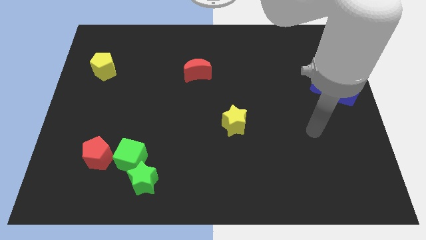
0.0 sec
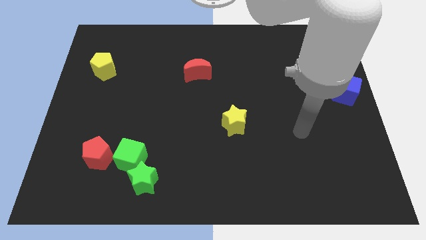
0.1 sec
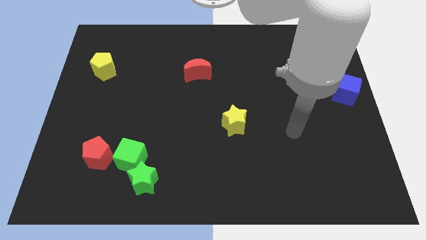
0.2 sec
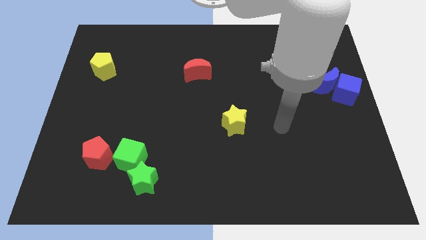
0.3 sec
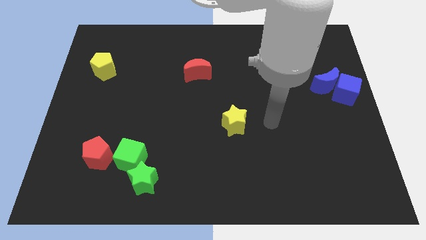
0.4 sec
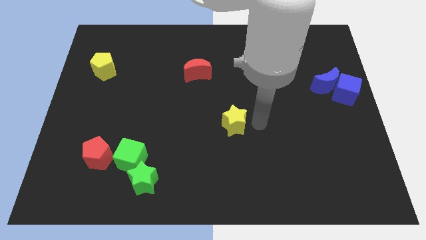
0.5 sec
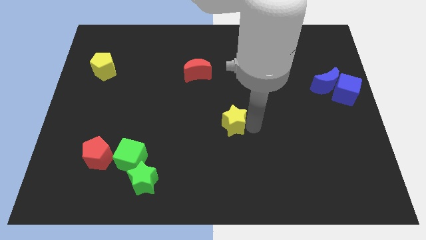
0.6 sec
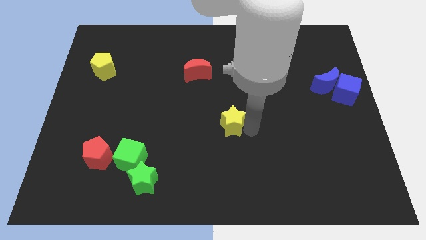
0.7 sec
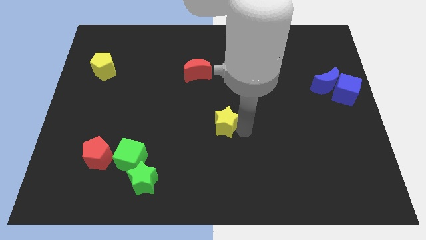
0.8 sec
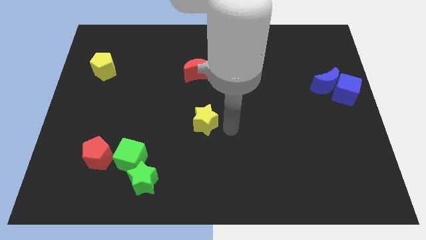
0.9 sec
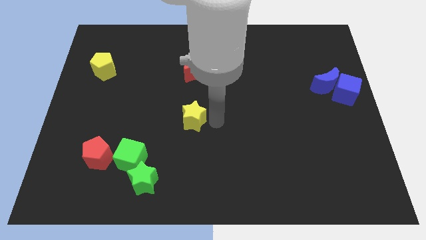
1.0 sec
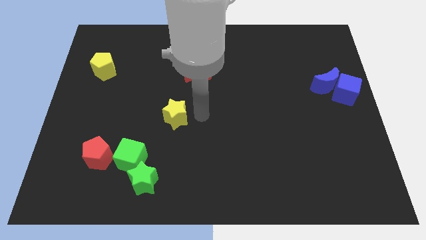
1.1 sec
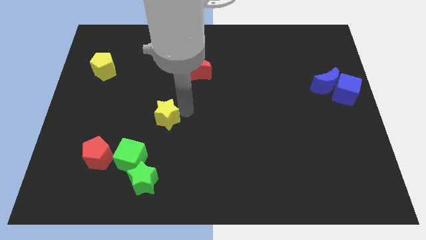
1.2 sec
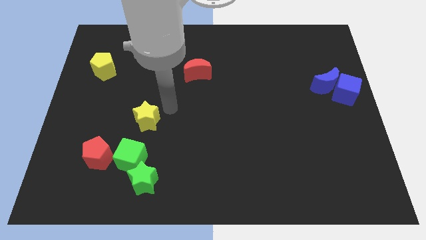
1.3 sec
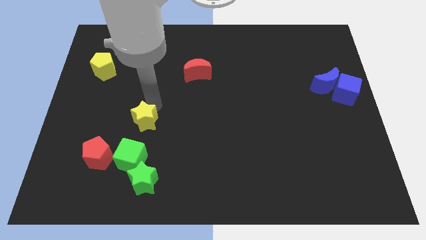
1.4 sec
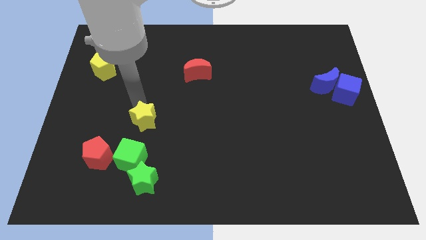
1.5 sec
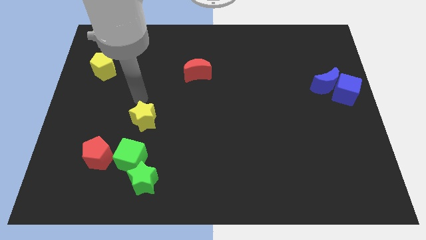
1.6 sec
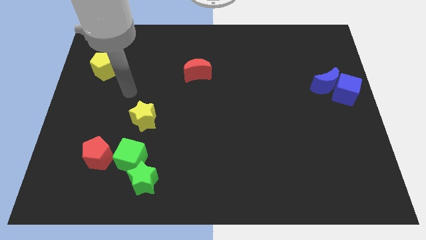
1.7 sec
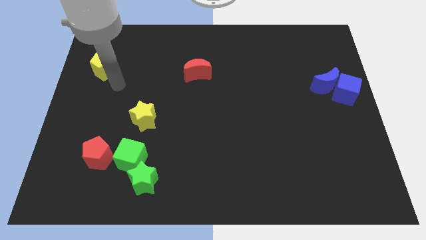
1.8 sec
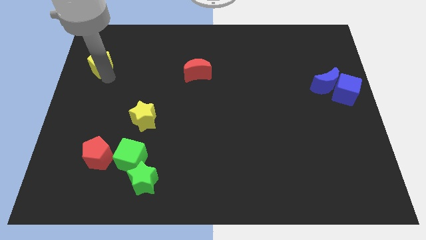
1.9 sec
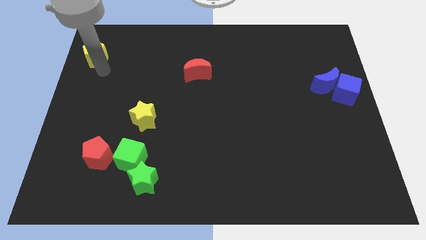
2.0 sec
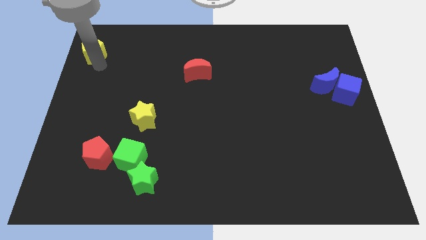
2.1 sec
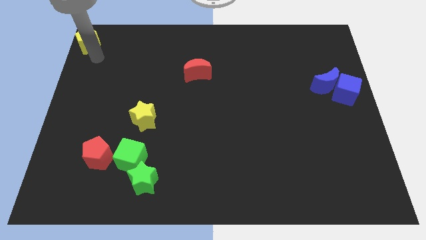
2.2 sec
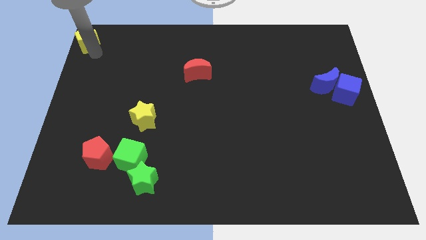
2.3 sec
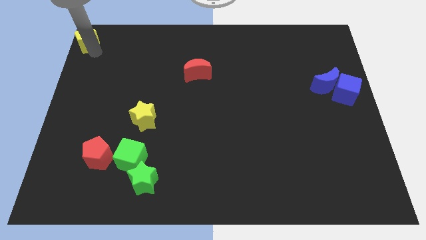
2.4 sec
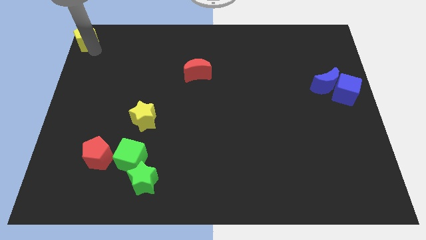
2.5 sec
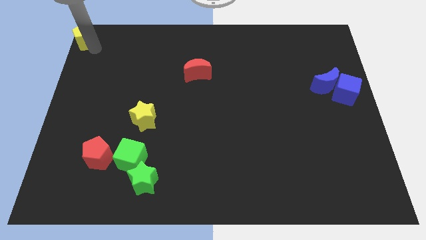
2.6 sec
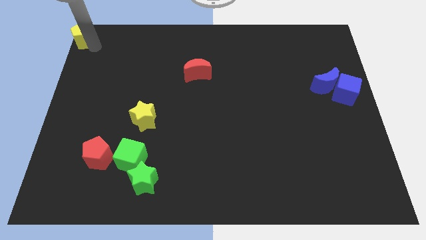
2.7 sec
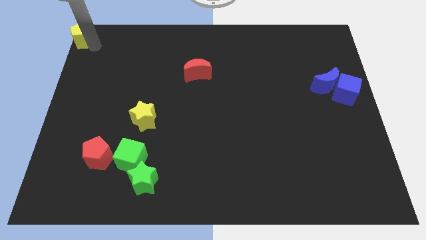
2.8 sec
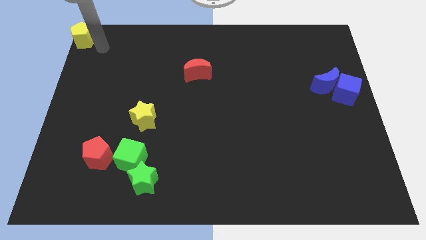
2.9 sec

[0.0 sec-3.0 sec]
place the yellow star above the green cube

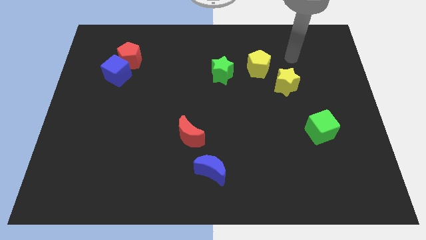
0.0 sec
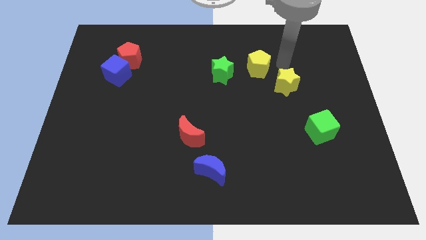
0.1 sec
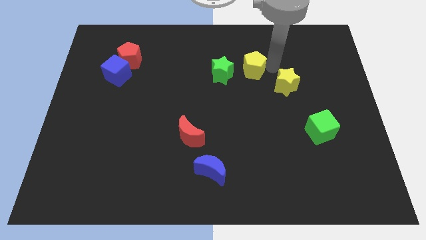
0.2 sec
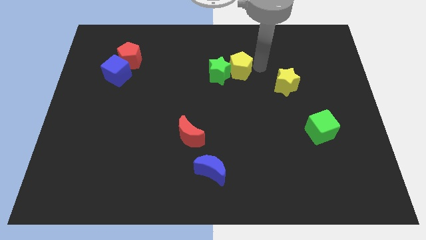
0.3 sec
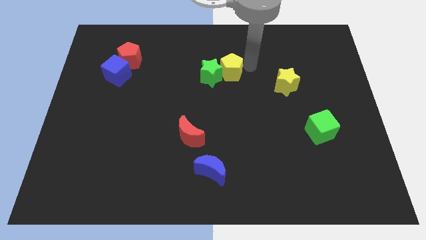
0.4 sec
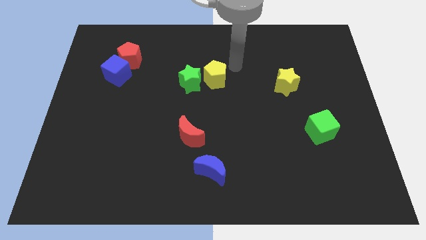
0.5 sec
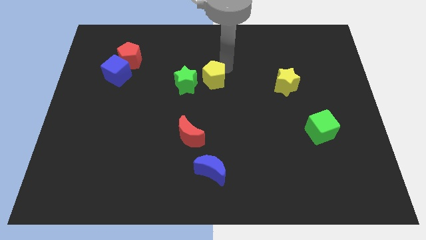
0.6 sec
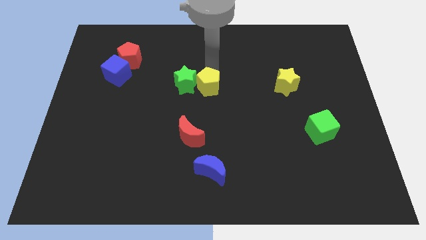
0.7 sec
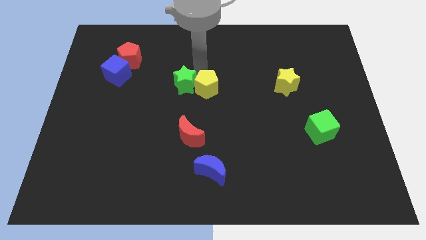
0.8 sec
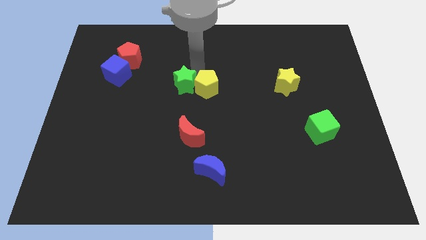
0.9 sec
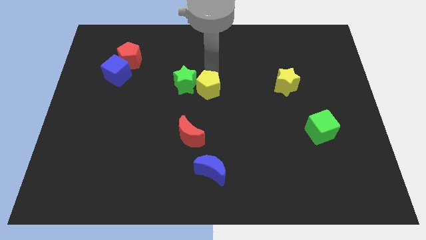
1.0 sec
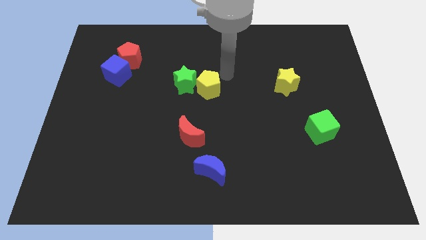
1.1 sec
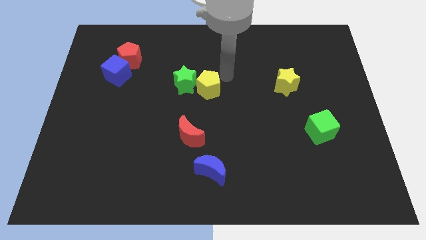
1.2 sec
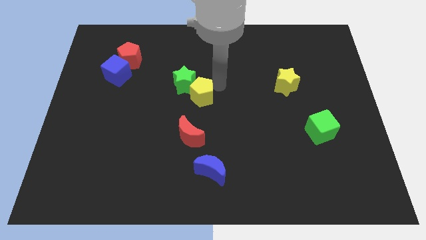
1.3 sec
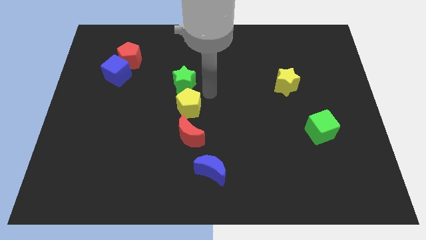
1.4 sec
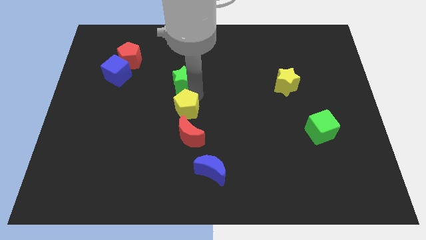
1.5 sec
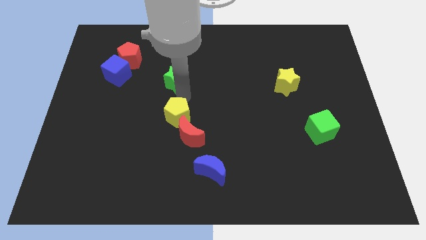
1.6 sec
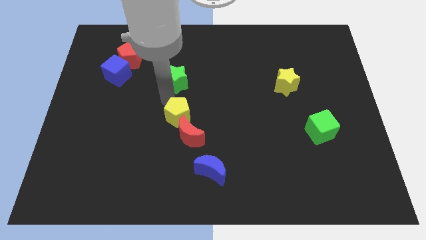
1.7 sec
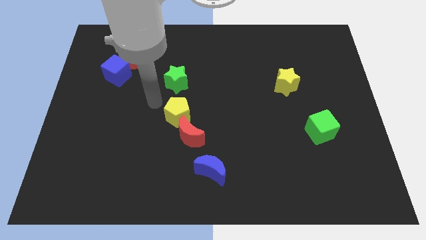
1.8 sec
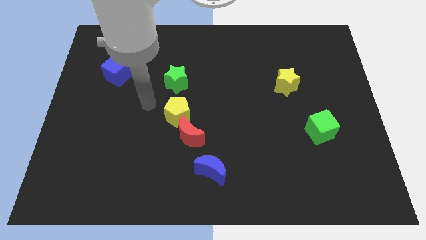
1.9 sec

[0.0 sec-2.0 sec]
push the yellow pentagon to the top left of the red moon

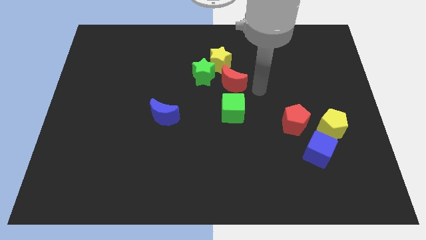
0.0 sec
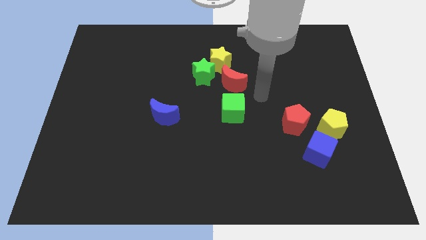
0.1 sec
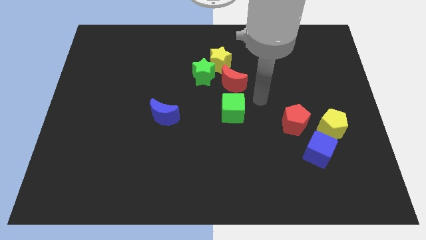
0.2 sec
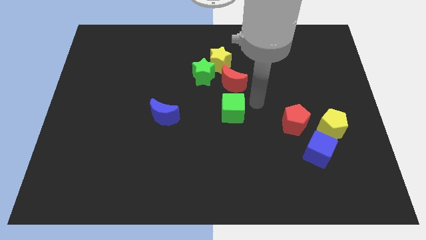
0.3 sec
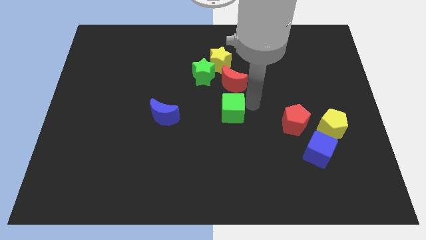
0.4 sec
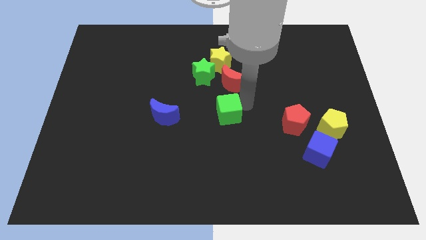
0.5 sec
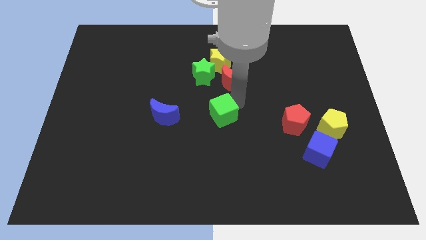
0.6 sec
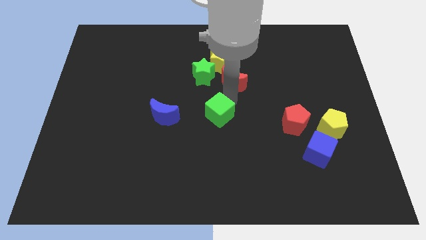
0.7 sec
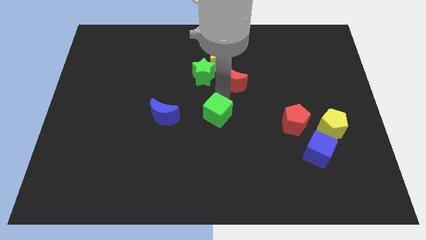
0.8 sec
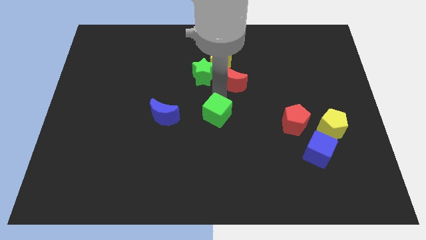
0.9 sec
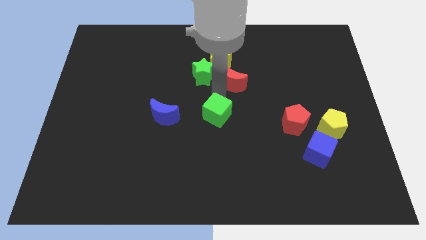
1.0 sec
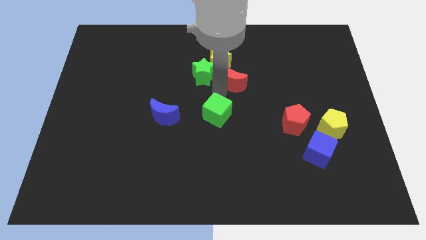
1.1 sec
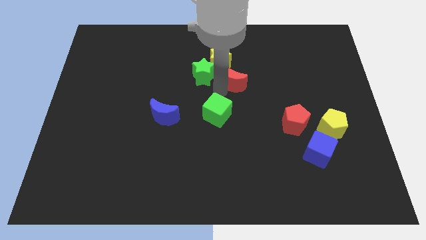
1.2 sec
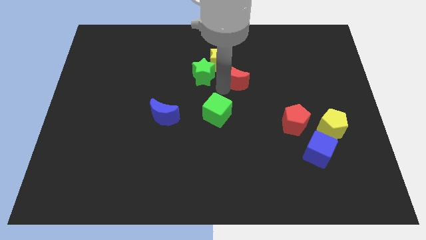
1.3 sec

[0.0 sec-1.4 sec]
push the green cube towards the blue crescent

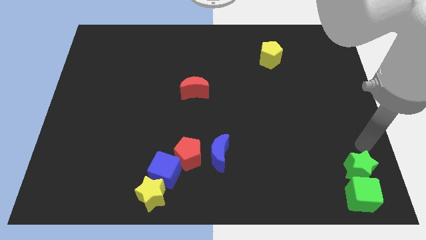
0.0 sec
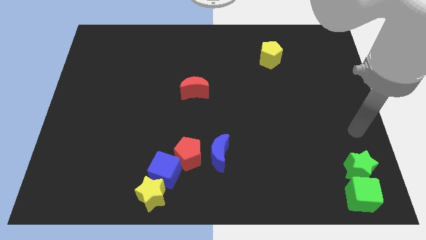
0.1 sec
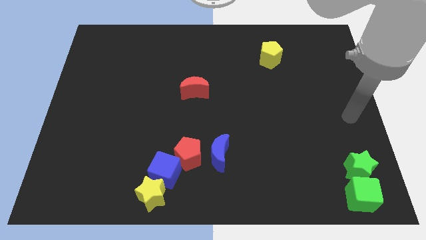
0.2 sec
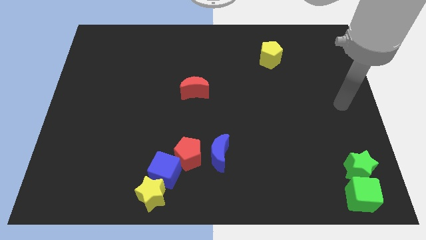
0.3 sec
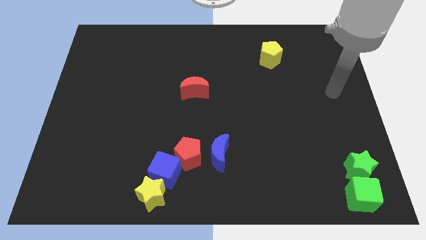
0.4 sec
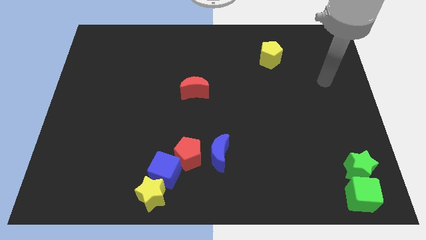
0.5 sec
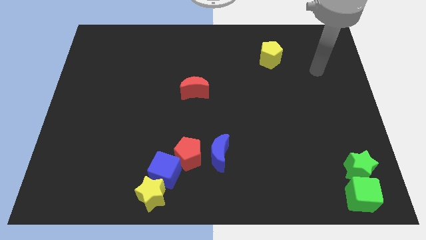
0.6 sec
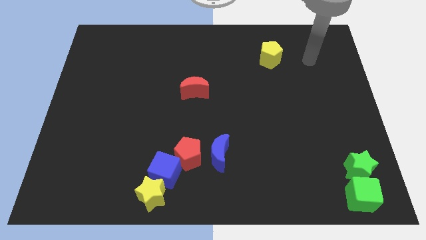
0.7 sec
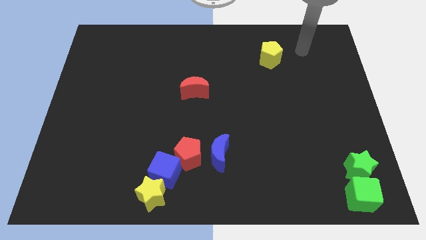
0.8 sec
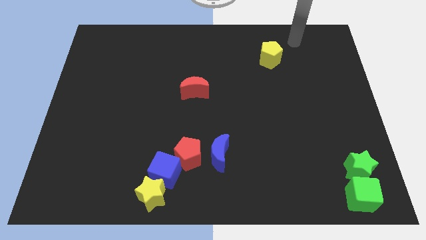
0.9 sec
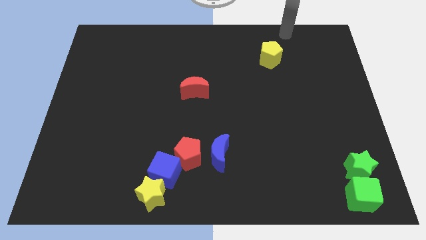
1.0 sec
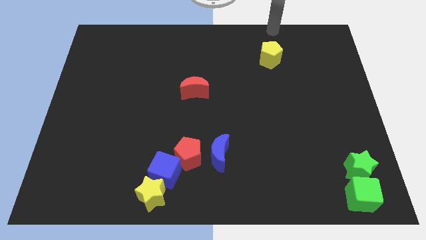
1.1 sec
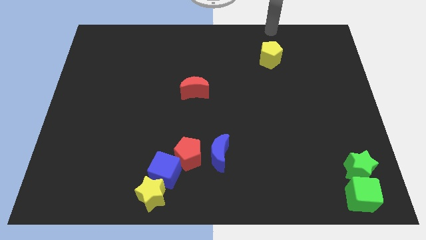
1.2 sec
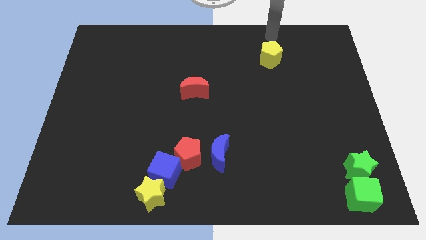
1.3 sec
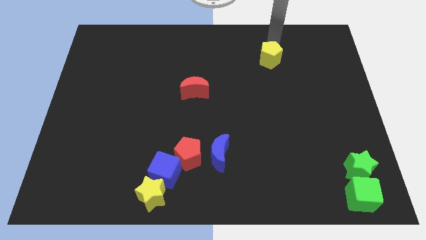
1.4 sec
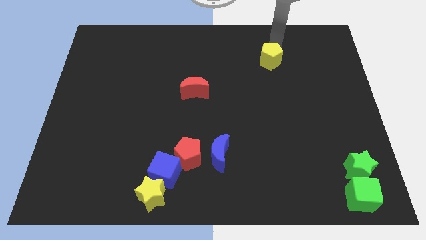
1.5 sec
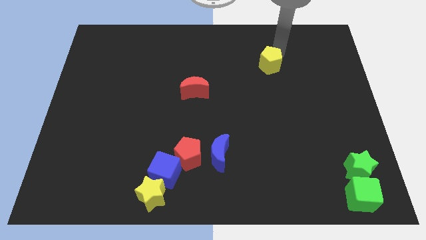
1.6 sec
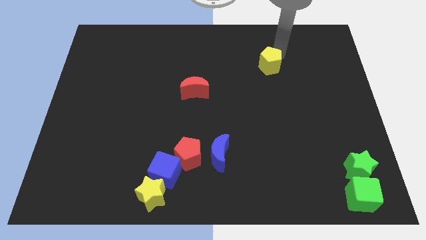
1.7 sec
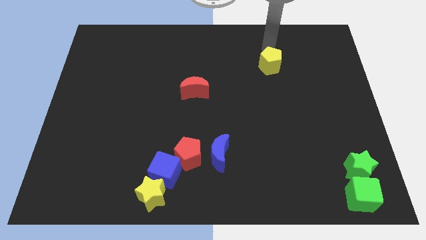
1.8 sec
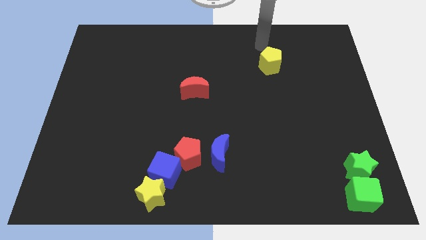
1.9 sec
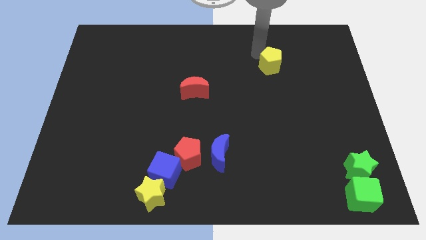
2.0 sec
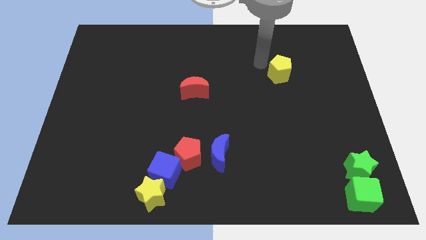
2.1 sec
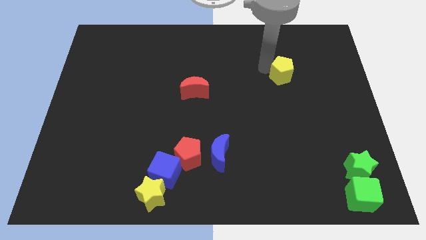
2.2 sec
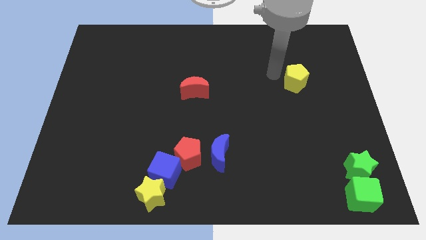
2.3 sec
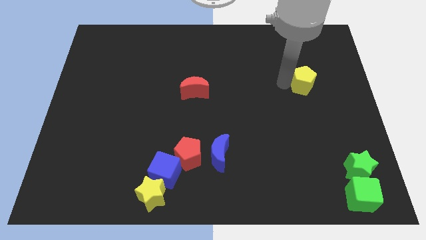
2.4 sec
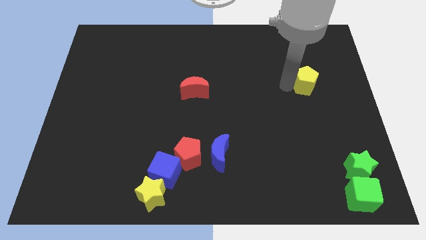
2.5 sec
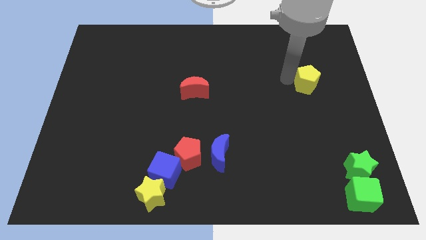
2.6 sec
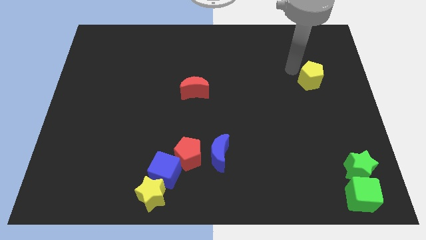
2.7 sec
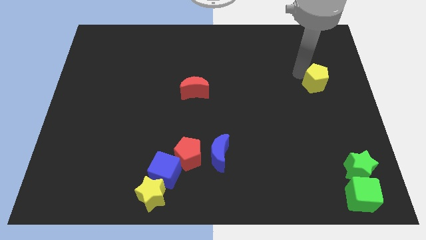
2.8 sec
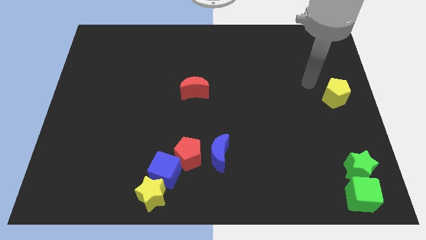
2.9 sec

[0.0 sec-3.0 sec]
push the yellow pentagon downward
